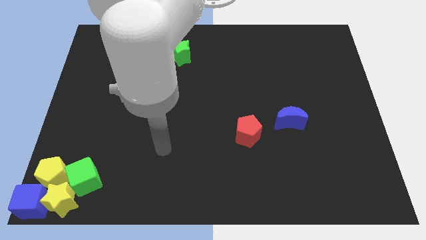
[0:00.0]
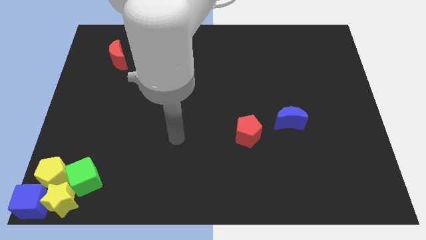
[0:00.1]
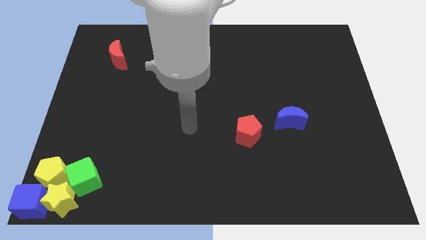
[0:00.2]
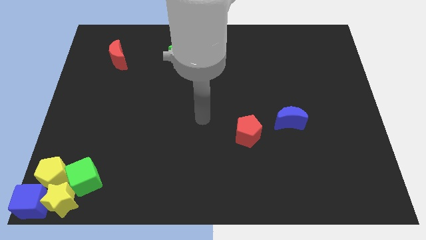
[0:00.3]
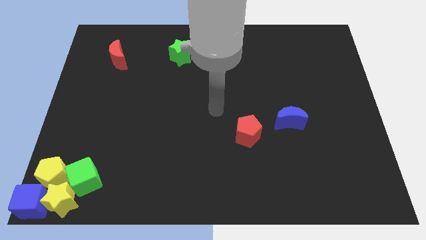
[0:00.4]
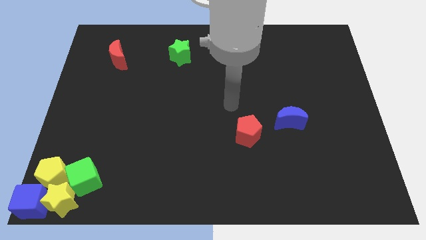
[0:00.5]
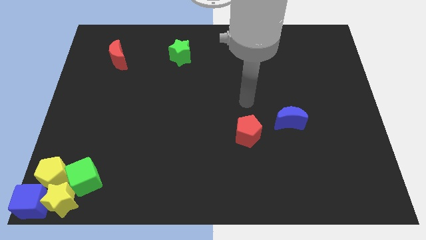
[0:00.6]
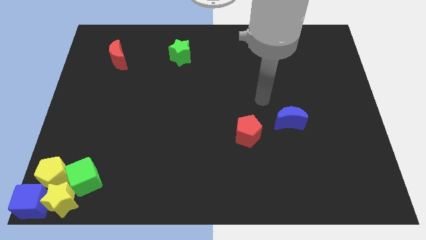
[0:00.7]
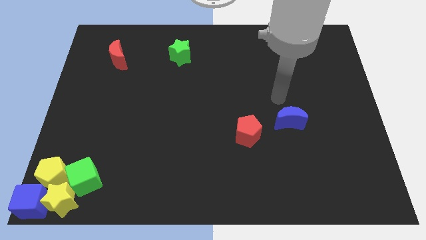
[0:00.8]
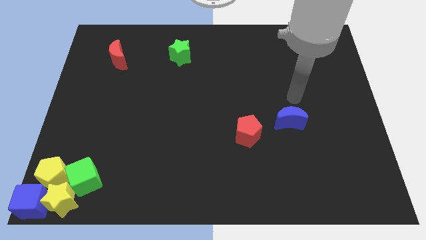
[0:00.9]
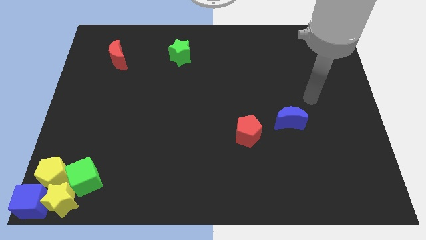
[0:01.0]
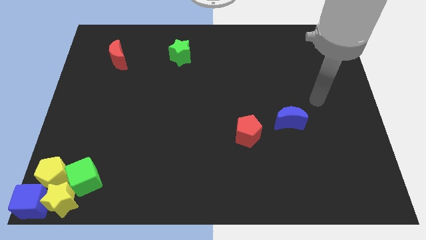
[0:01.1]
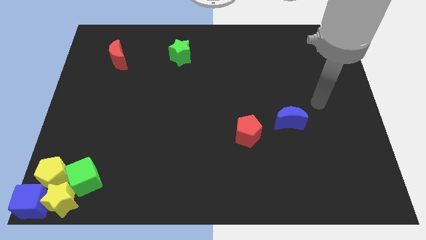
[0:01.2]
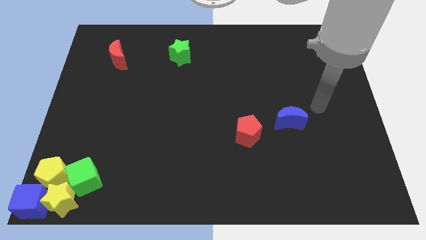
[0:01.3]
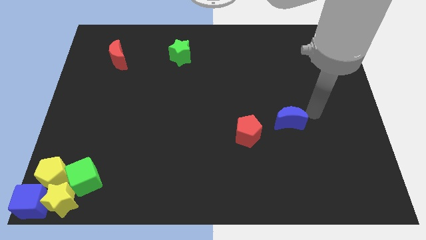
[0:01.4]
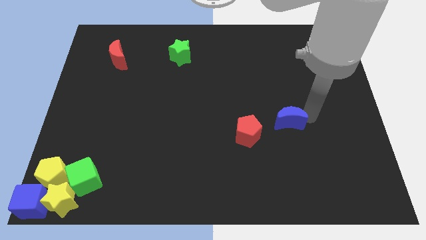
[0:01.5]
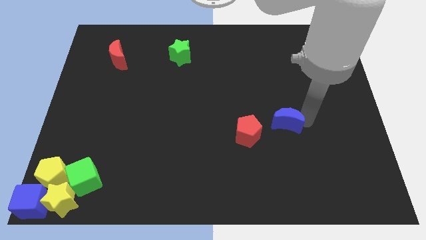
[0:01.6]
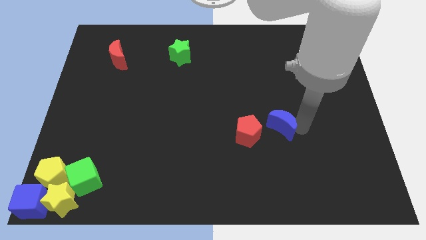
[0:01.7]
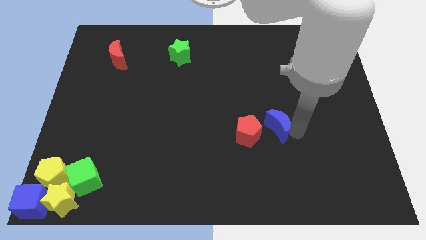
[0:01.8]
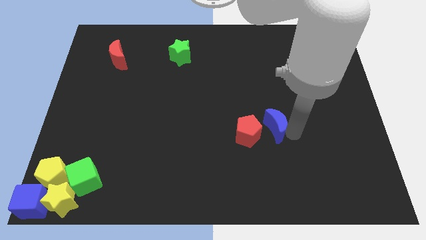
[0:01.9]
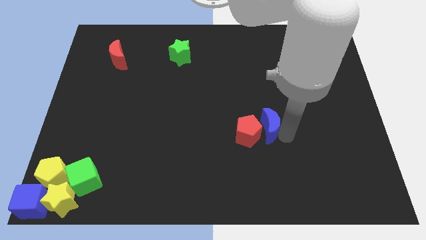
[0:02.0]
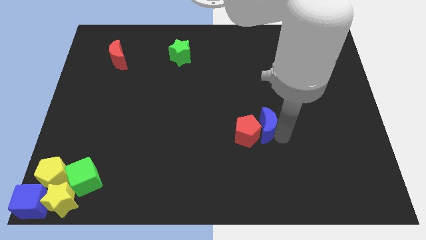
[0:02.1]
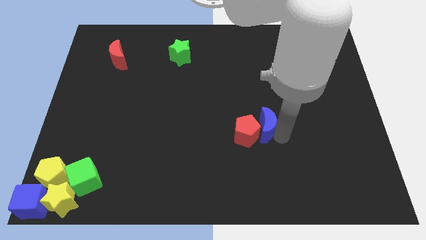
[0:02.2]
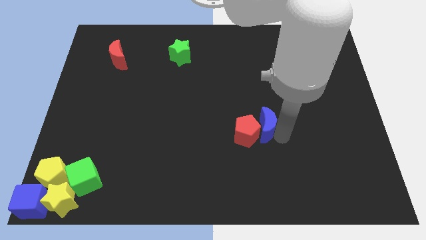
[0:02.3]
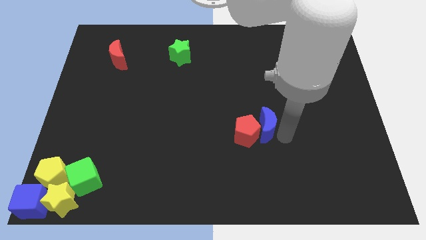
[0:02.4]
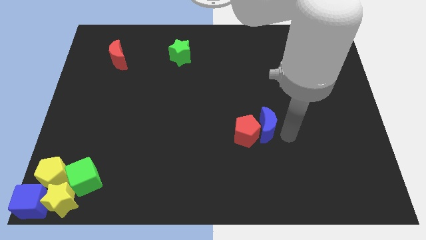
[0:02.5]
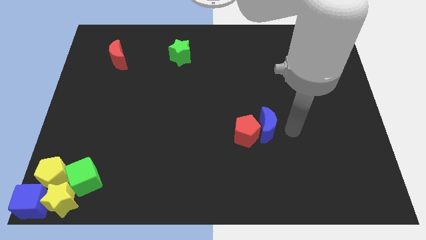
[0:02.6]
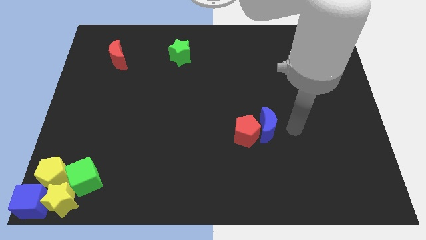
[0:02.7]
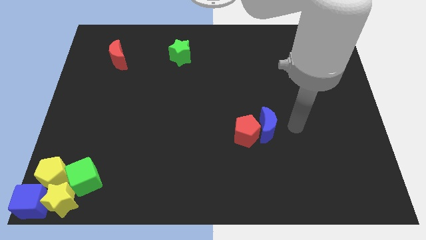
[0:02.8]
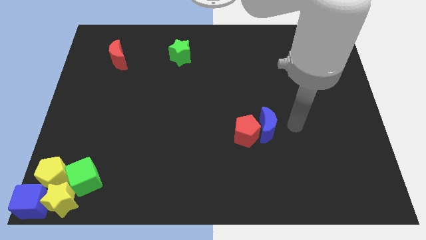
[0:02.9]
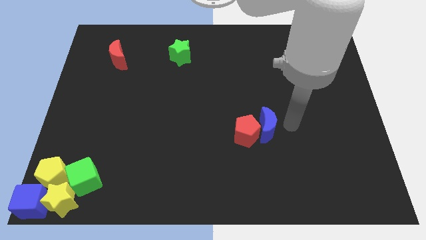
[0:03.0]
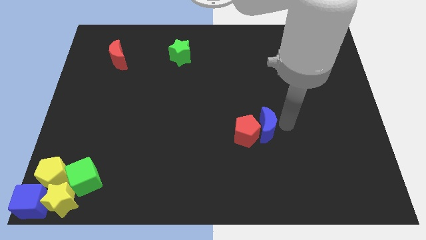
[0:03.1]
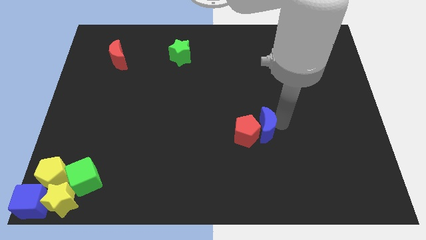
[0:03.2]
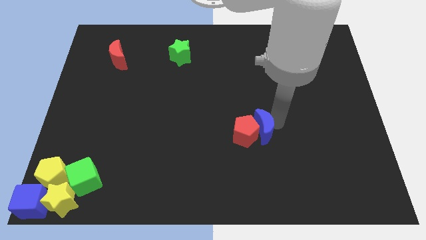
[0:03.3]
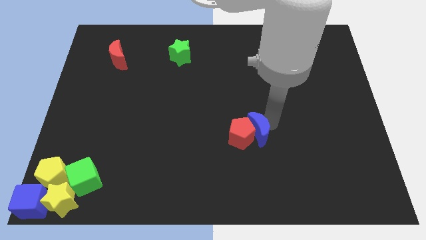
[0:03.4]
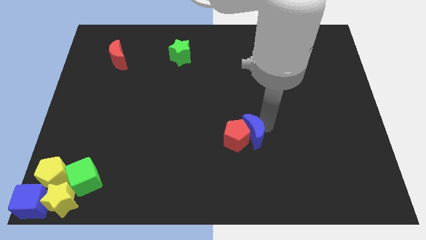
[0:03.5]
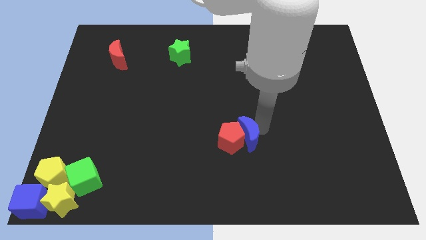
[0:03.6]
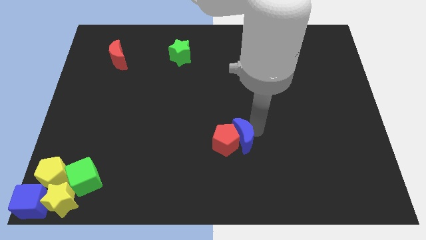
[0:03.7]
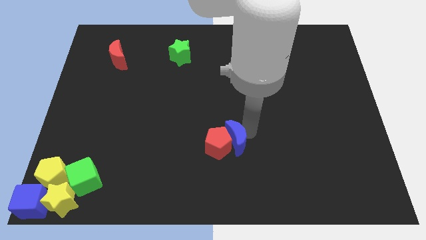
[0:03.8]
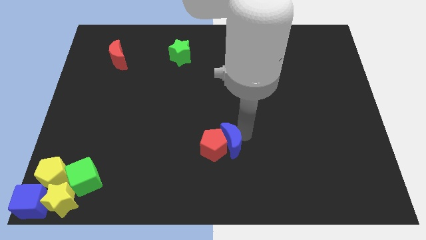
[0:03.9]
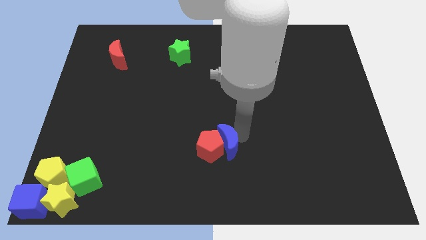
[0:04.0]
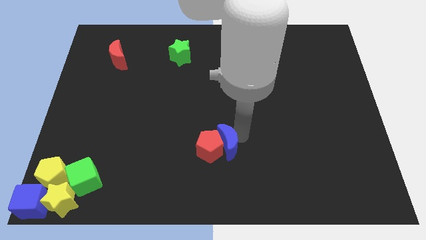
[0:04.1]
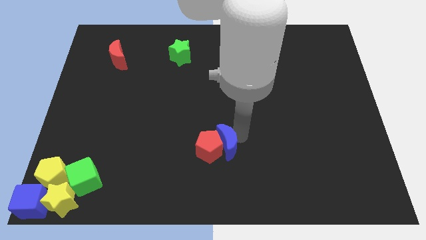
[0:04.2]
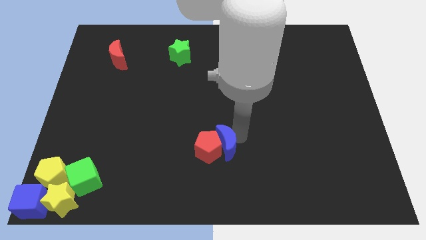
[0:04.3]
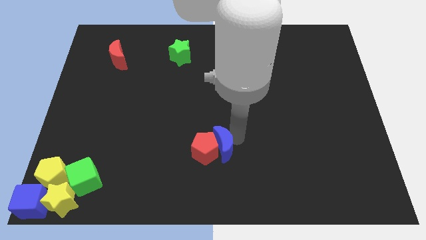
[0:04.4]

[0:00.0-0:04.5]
push red pentagon with the blue moon towards the left side of the board

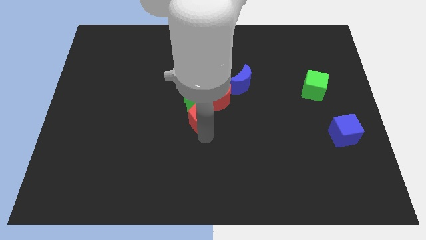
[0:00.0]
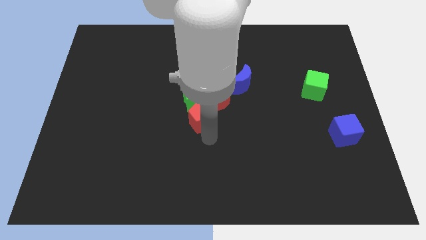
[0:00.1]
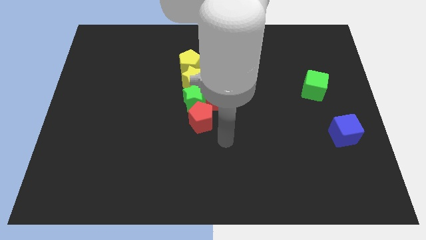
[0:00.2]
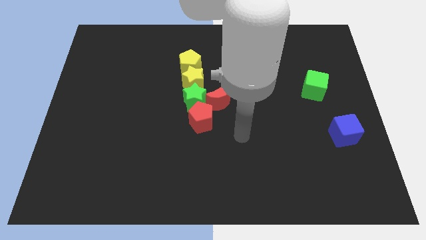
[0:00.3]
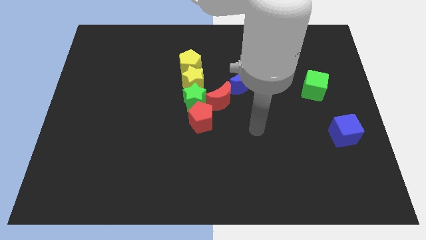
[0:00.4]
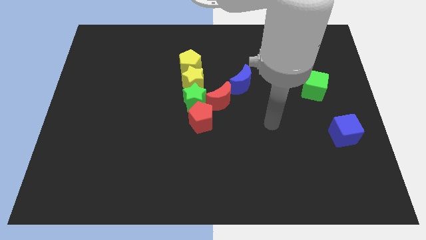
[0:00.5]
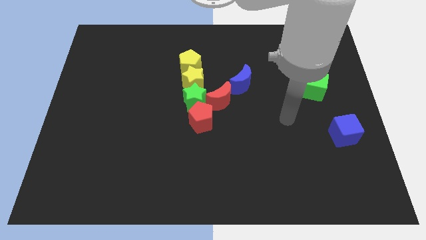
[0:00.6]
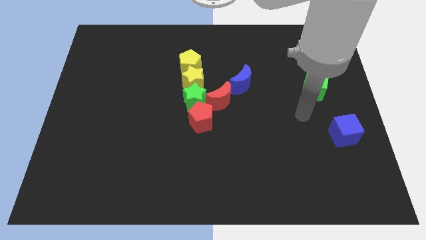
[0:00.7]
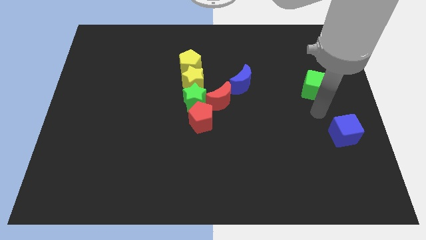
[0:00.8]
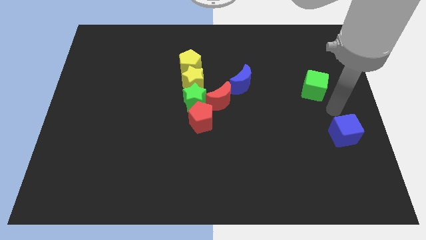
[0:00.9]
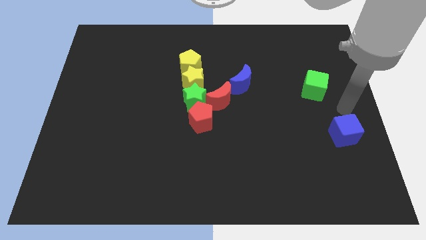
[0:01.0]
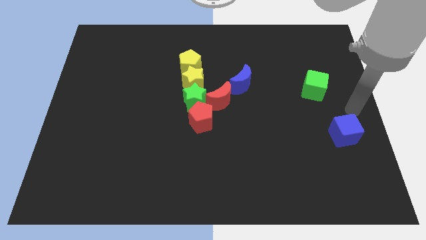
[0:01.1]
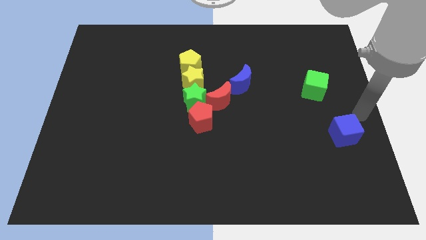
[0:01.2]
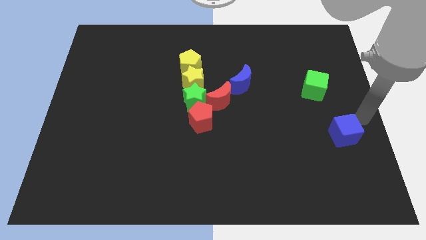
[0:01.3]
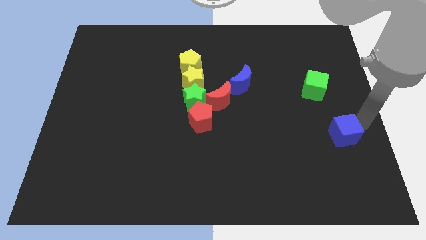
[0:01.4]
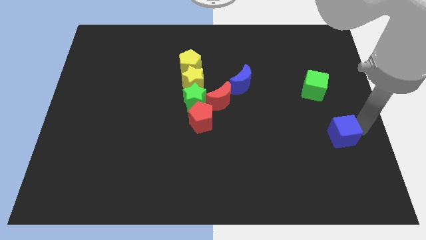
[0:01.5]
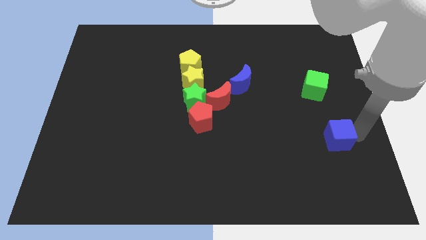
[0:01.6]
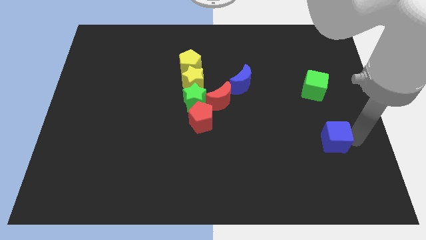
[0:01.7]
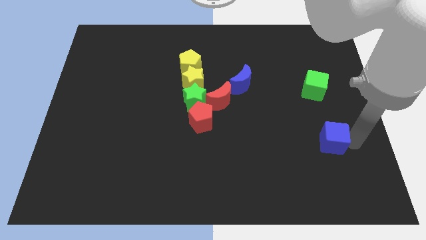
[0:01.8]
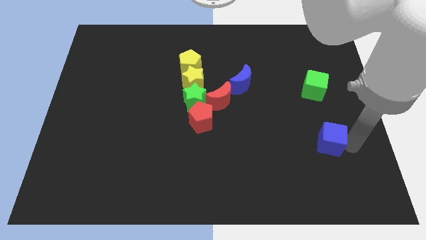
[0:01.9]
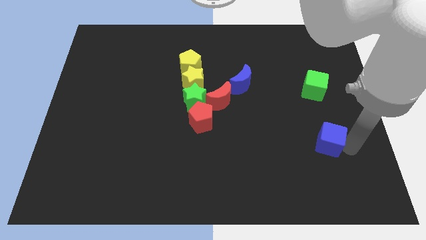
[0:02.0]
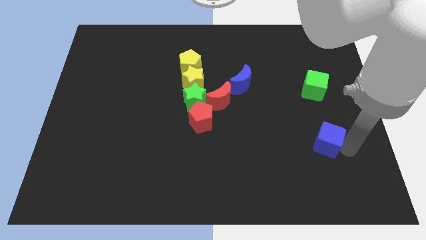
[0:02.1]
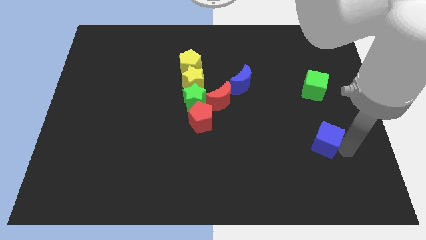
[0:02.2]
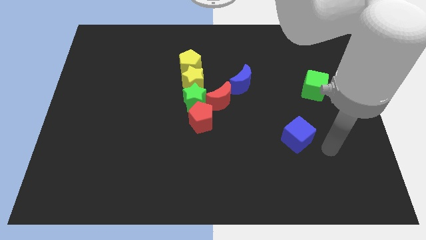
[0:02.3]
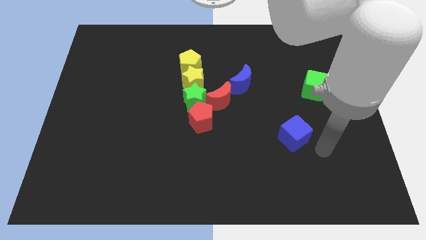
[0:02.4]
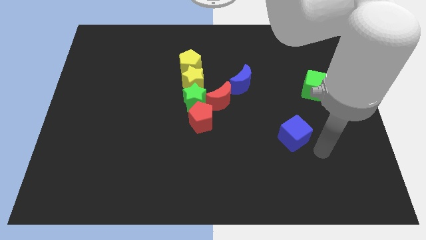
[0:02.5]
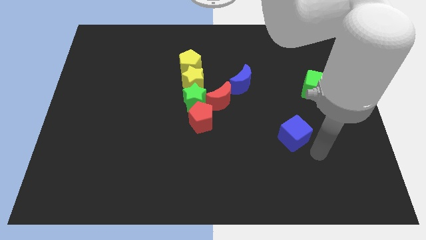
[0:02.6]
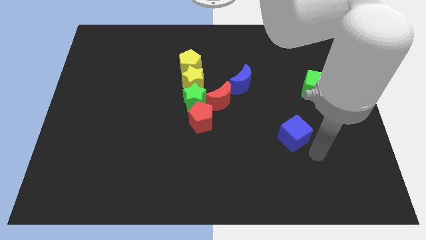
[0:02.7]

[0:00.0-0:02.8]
push the blue cube towards the left side of the board

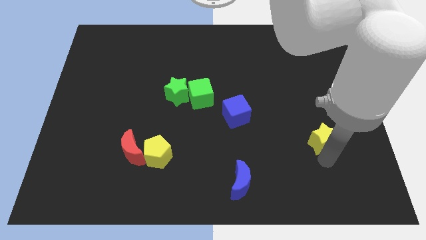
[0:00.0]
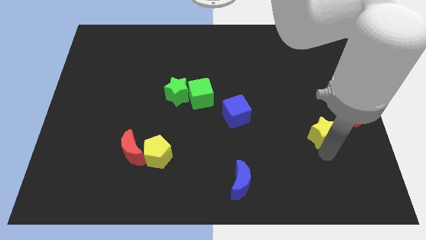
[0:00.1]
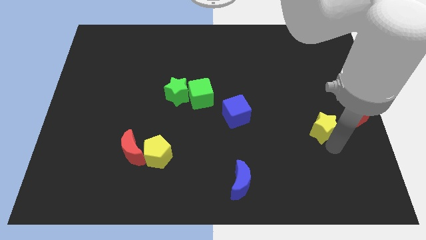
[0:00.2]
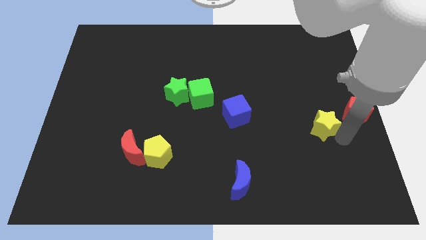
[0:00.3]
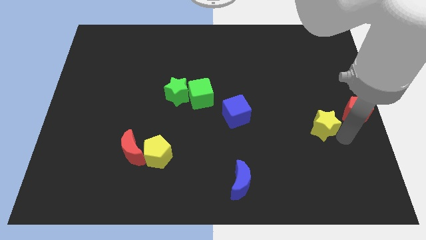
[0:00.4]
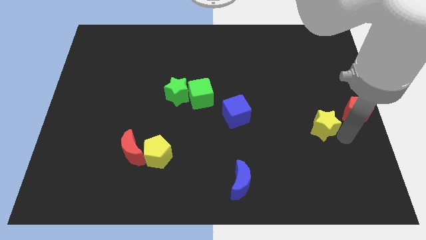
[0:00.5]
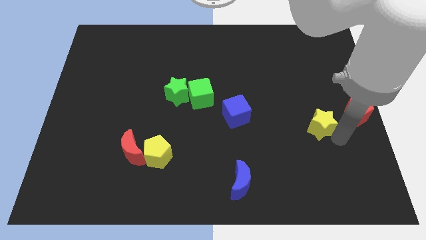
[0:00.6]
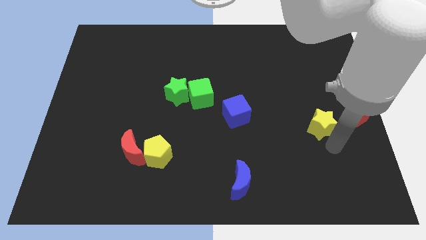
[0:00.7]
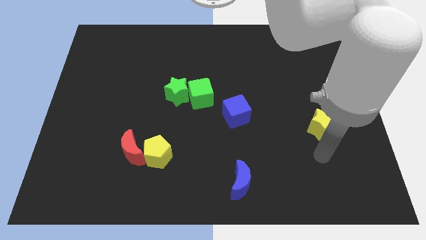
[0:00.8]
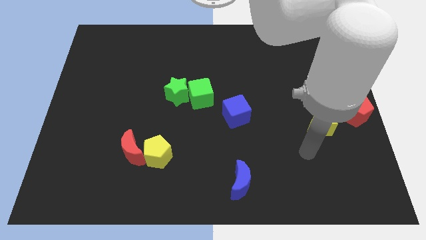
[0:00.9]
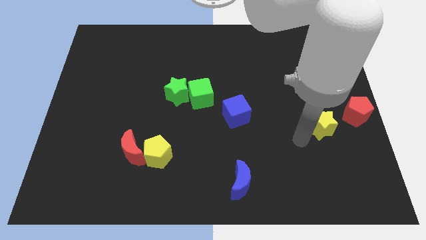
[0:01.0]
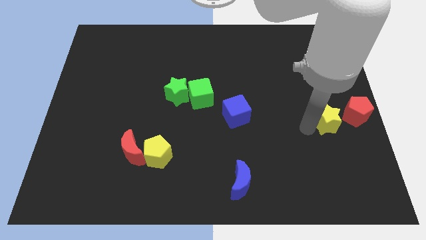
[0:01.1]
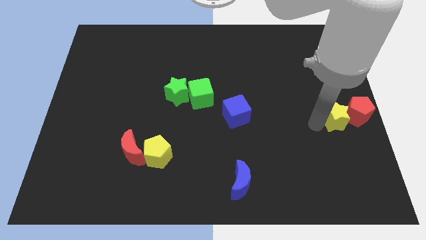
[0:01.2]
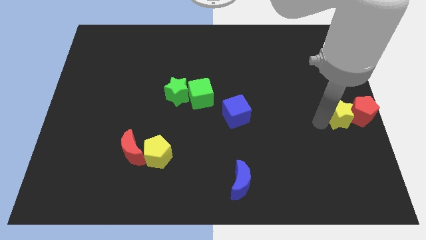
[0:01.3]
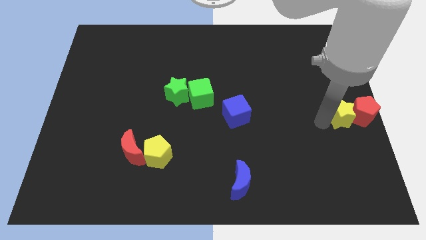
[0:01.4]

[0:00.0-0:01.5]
push yellow star into red pentagon
